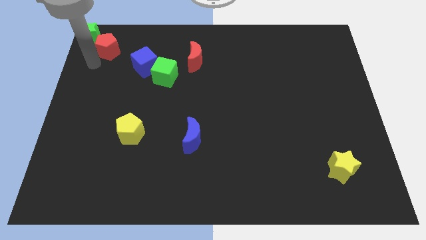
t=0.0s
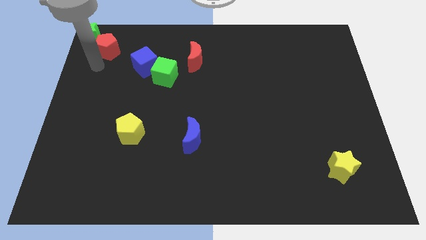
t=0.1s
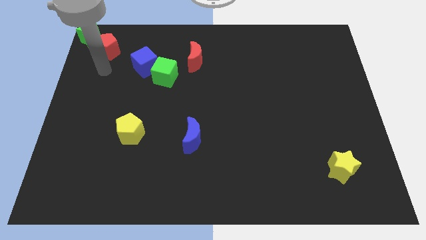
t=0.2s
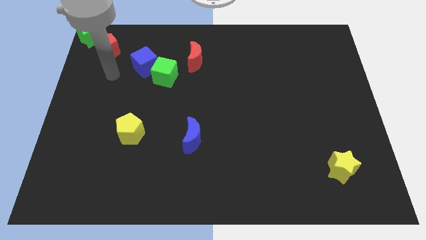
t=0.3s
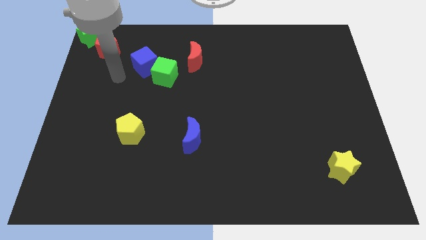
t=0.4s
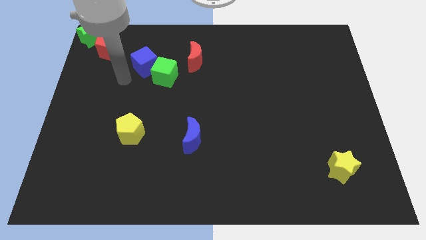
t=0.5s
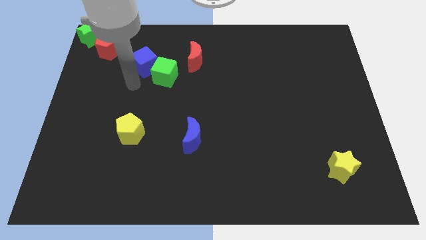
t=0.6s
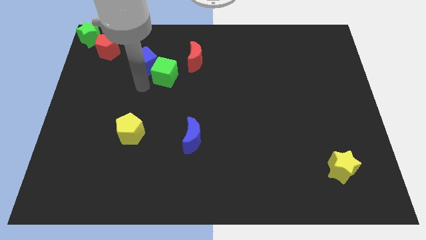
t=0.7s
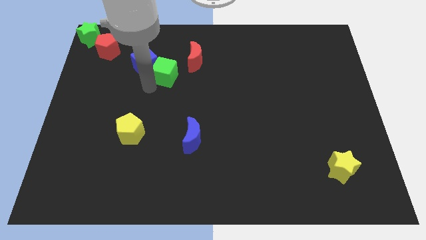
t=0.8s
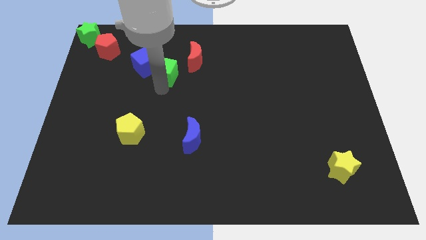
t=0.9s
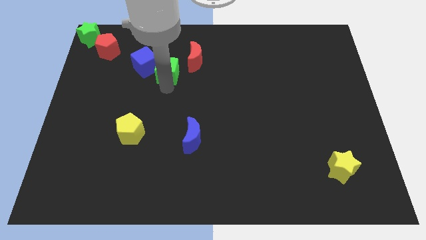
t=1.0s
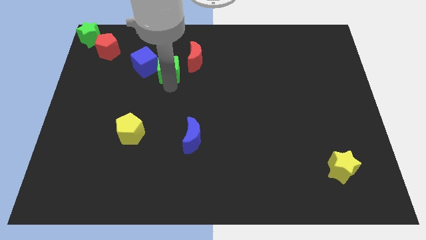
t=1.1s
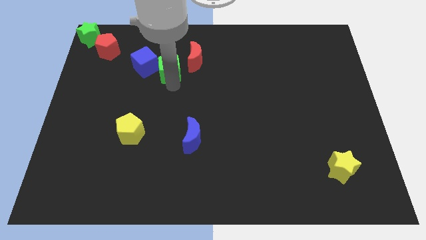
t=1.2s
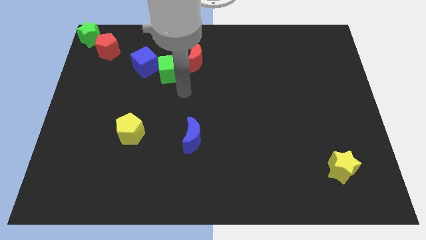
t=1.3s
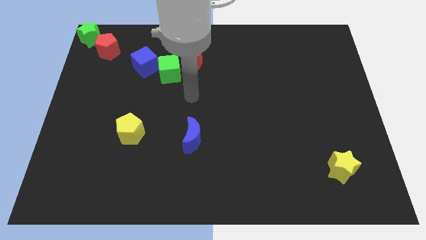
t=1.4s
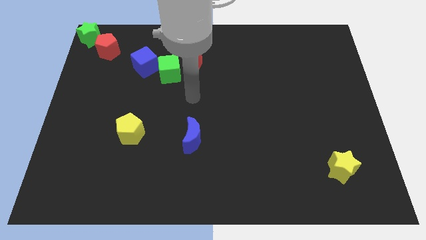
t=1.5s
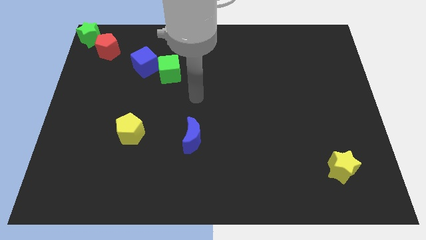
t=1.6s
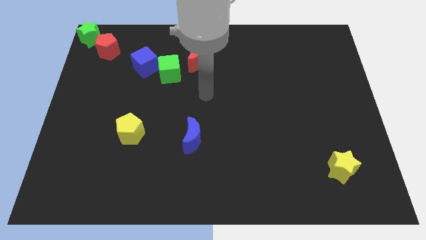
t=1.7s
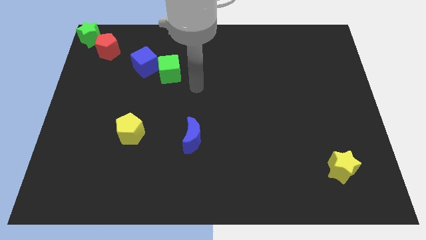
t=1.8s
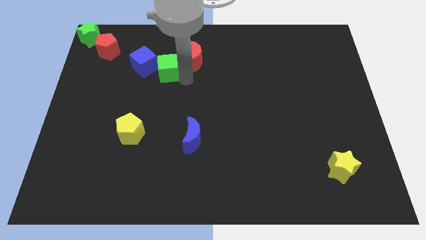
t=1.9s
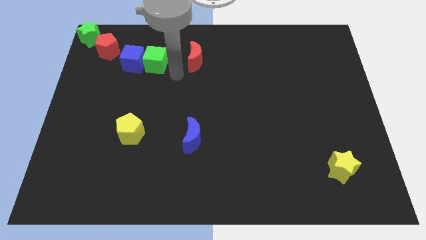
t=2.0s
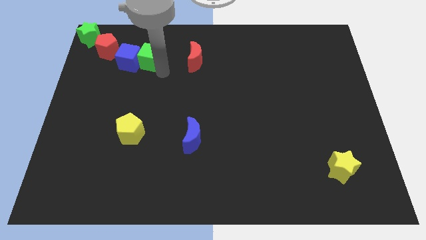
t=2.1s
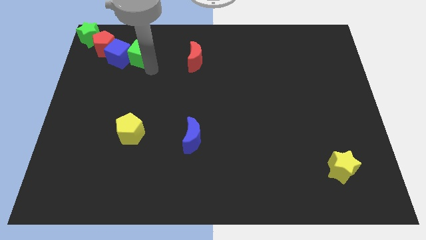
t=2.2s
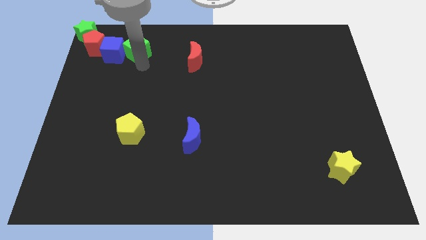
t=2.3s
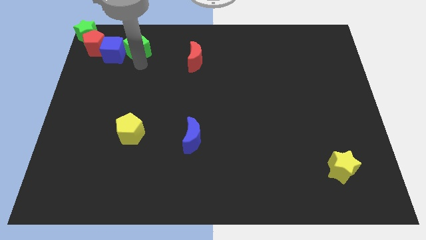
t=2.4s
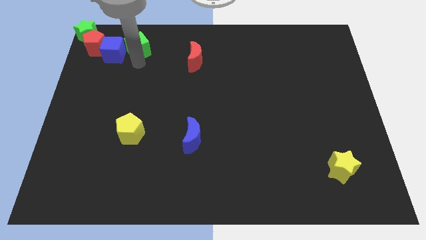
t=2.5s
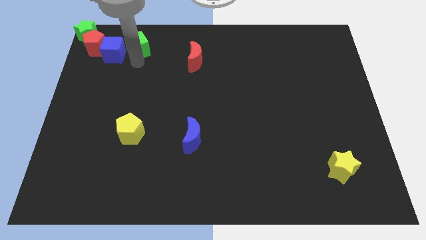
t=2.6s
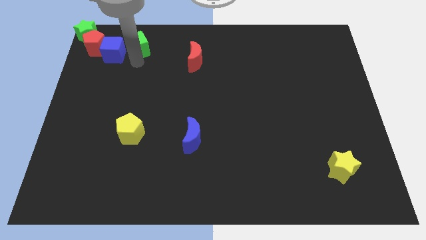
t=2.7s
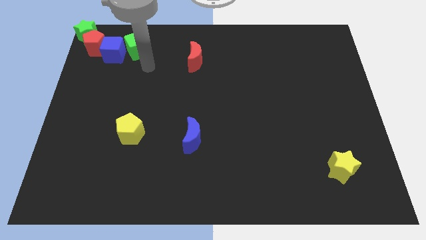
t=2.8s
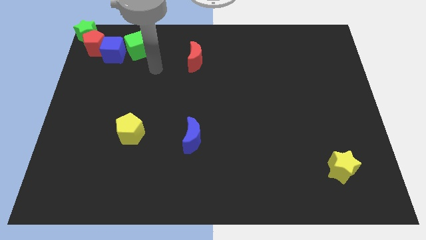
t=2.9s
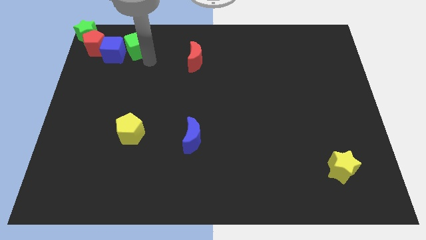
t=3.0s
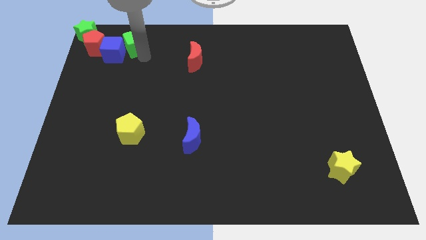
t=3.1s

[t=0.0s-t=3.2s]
push the blue and green cube into the group of blocks

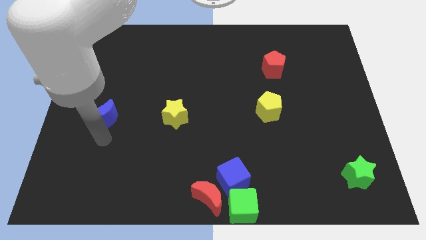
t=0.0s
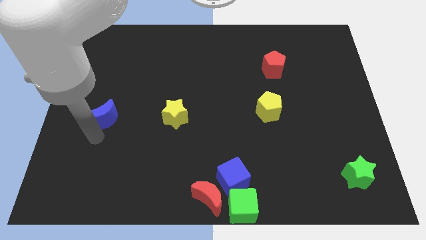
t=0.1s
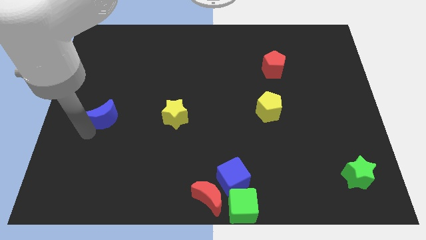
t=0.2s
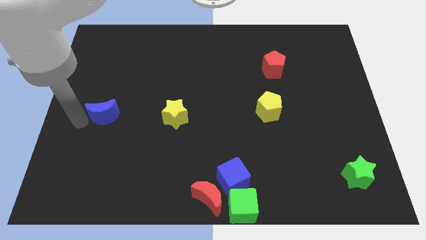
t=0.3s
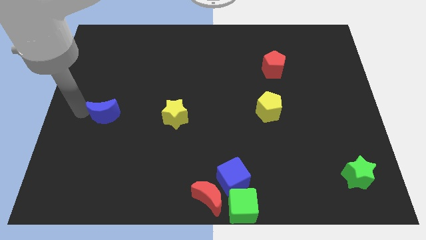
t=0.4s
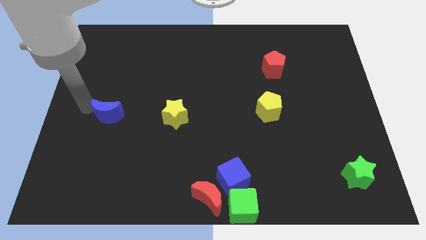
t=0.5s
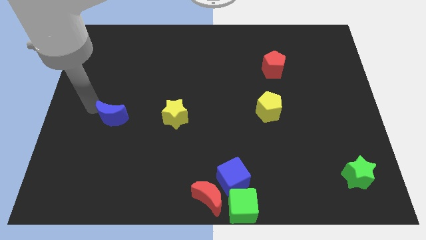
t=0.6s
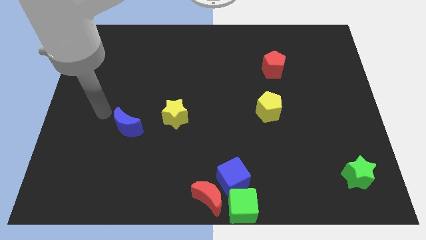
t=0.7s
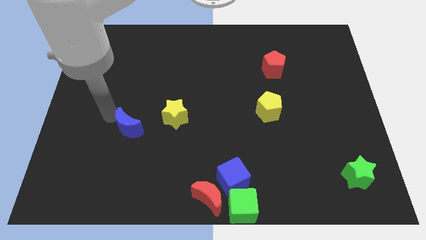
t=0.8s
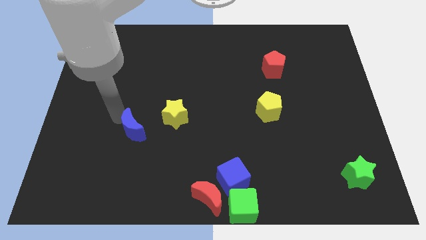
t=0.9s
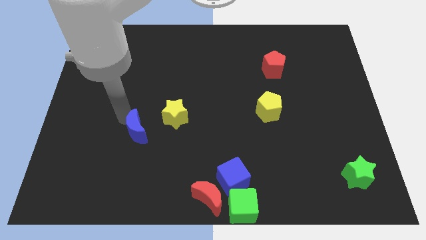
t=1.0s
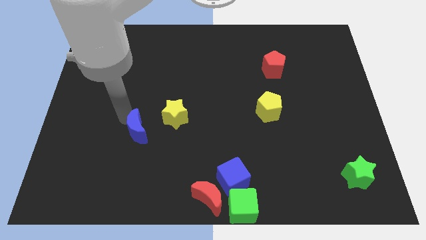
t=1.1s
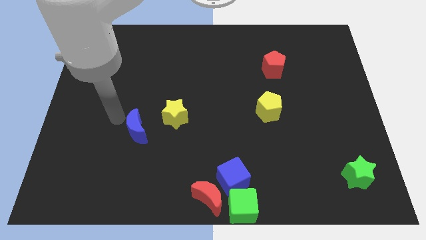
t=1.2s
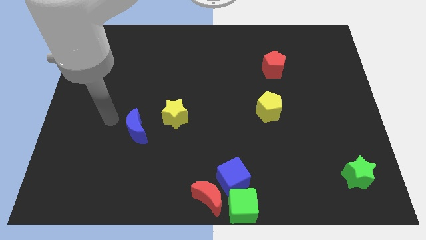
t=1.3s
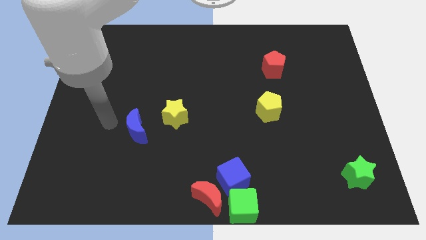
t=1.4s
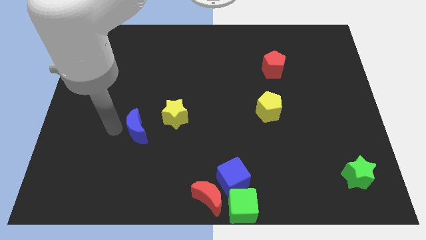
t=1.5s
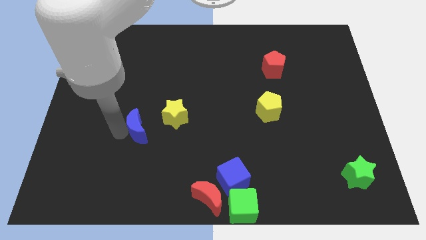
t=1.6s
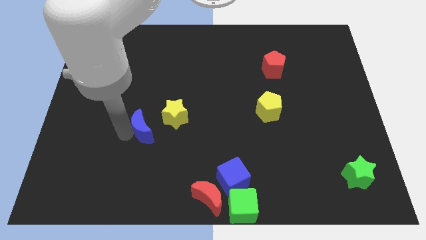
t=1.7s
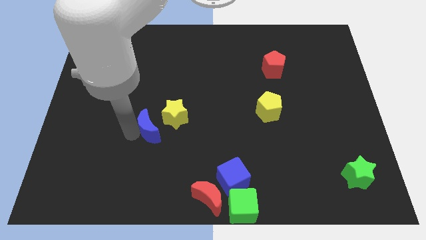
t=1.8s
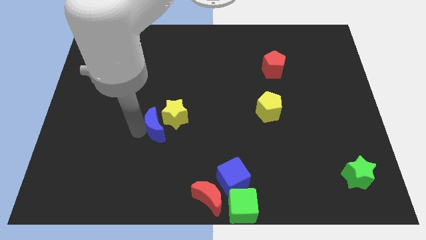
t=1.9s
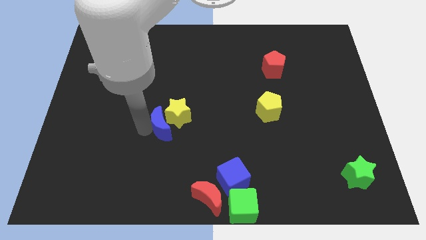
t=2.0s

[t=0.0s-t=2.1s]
push the blue crescent into the left side of the yellow star

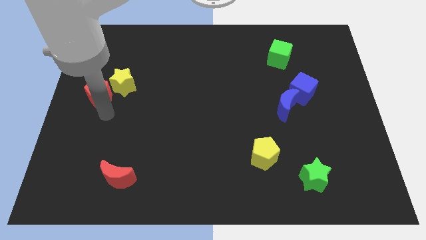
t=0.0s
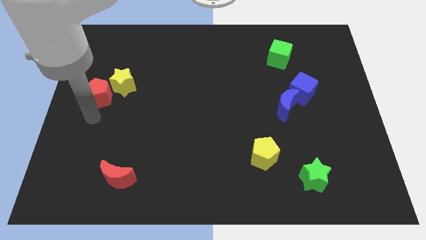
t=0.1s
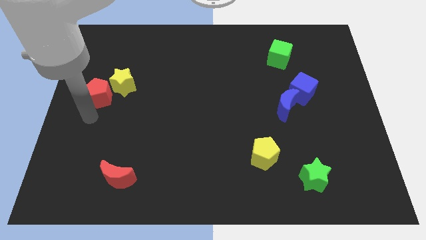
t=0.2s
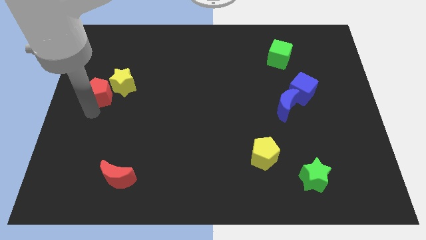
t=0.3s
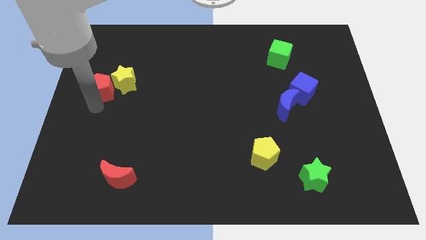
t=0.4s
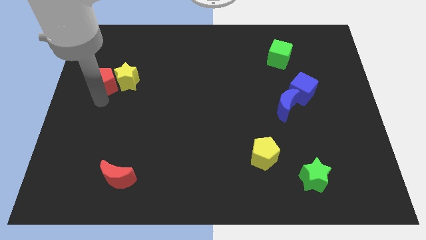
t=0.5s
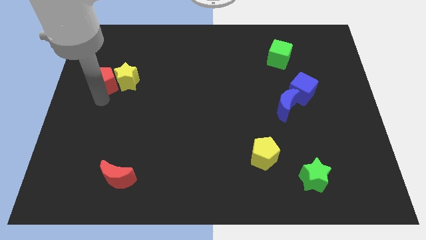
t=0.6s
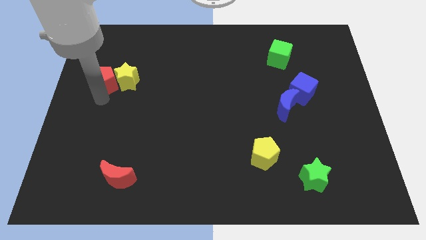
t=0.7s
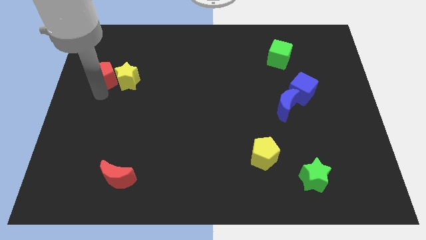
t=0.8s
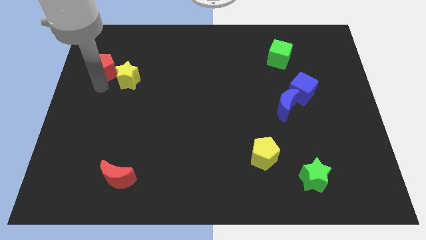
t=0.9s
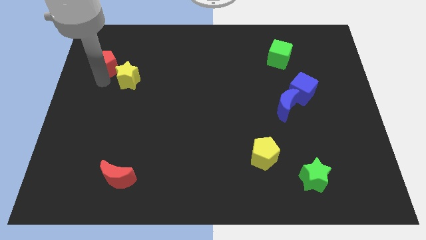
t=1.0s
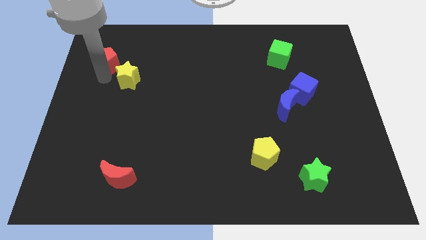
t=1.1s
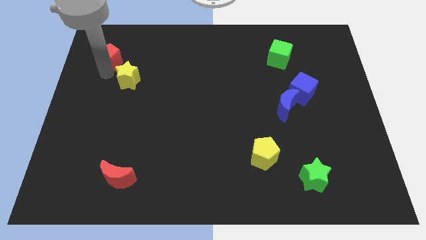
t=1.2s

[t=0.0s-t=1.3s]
push the red pentagon slightly up

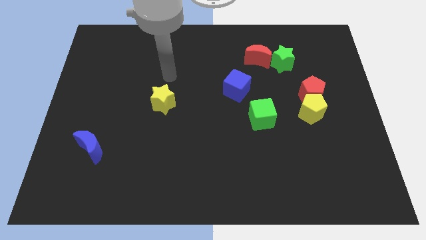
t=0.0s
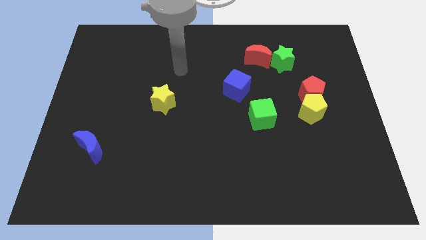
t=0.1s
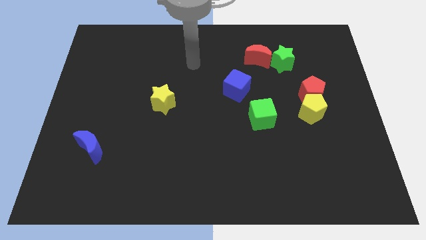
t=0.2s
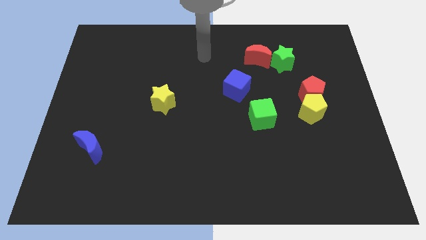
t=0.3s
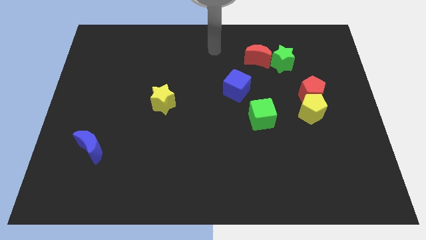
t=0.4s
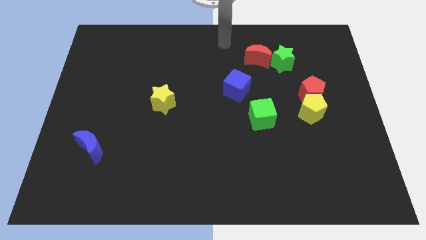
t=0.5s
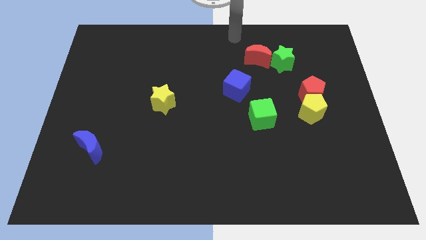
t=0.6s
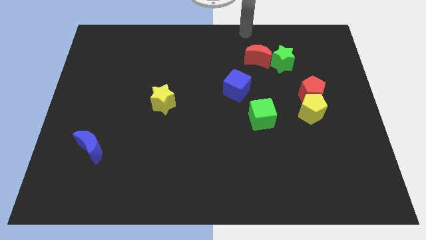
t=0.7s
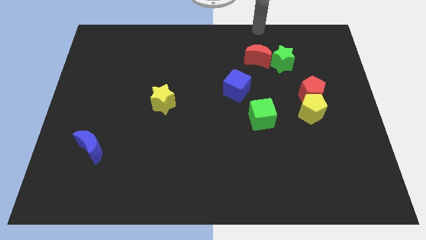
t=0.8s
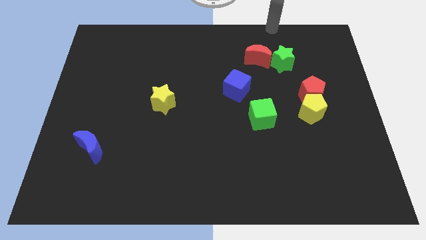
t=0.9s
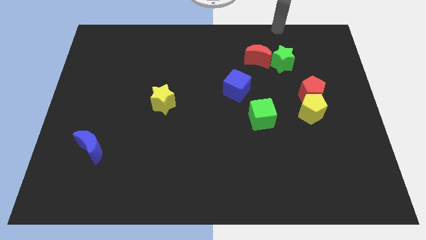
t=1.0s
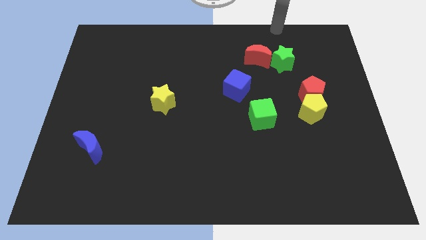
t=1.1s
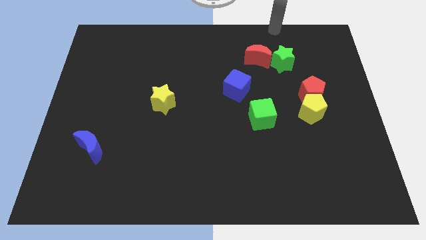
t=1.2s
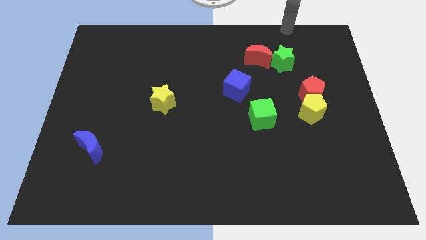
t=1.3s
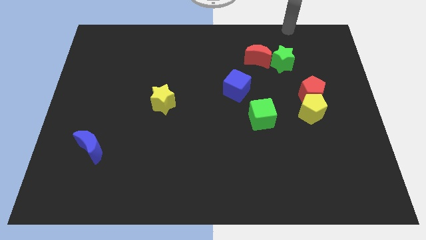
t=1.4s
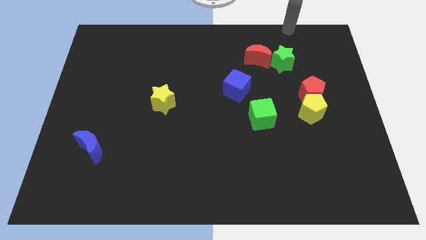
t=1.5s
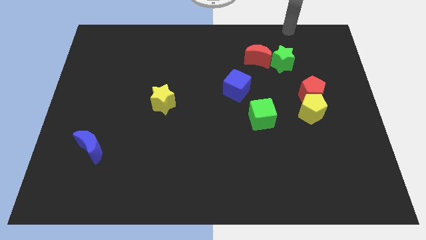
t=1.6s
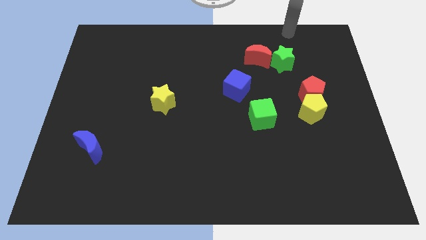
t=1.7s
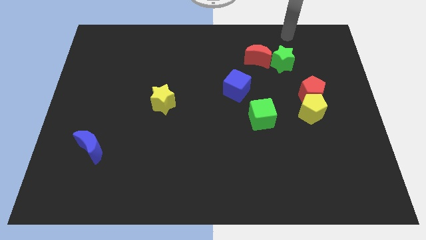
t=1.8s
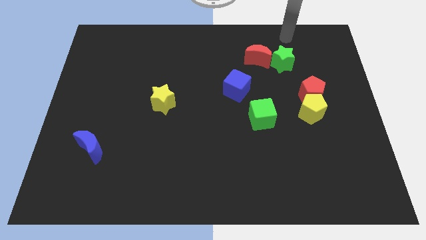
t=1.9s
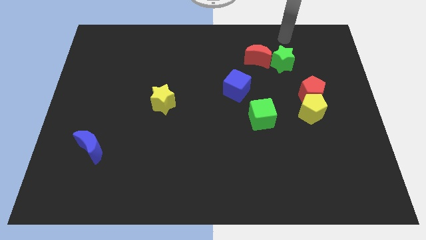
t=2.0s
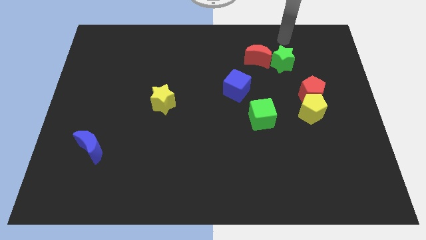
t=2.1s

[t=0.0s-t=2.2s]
place the arm above the green star

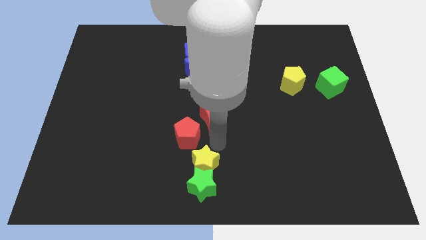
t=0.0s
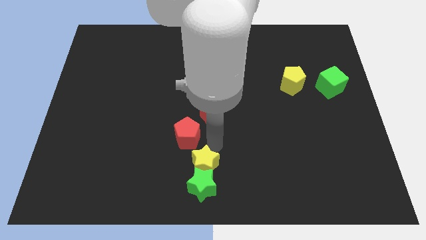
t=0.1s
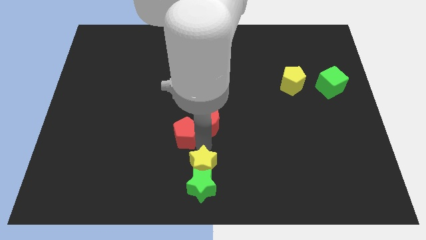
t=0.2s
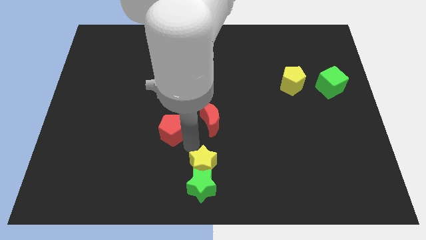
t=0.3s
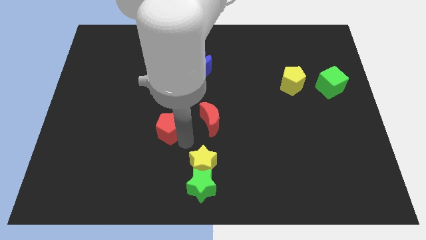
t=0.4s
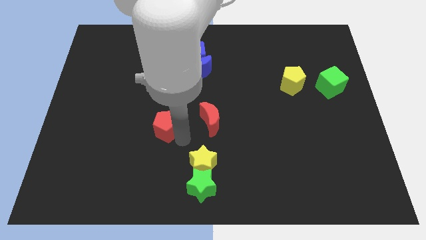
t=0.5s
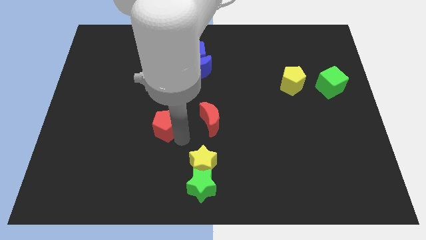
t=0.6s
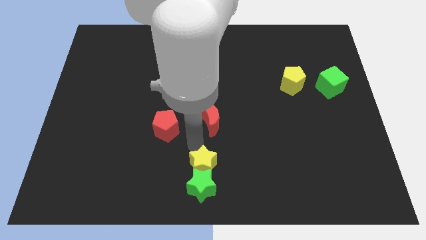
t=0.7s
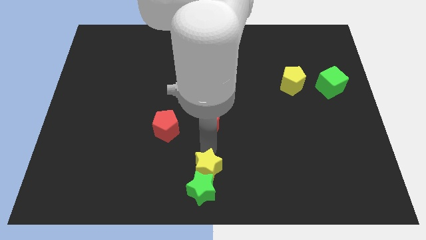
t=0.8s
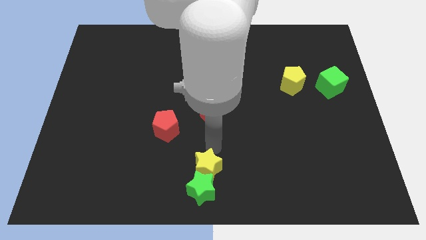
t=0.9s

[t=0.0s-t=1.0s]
separate the red pentagon from a group of objcets
